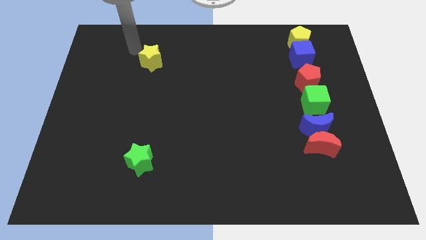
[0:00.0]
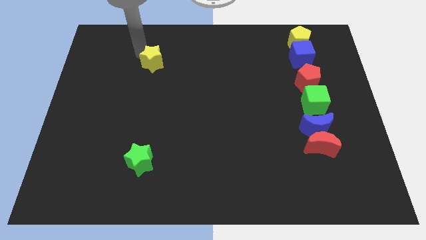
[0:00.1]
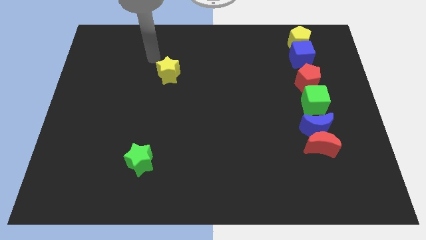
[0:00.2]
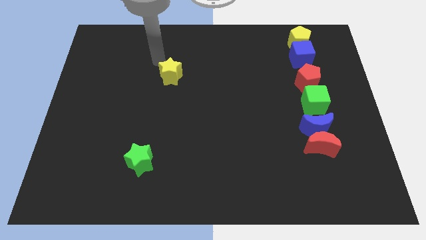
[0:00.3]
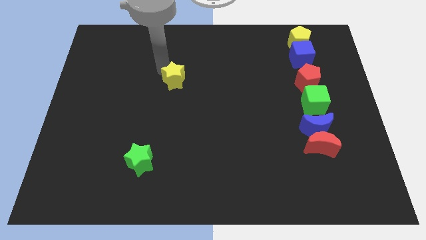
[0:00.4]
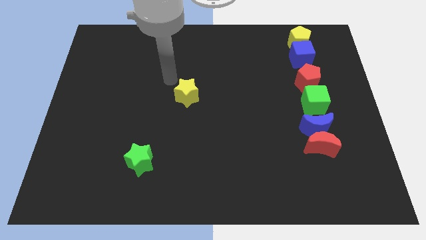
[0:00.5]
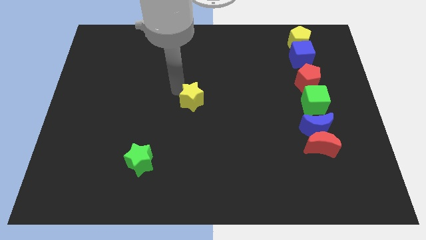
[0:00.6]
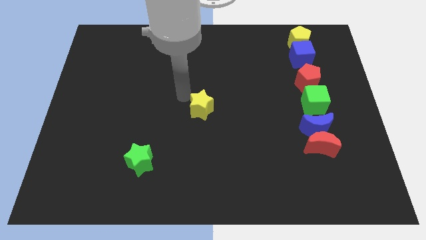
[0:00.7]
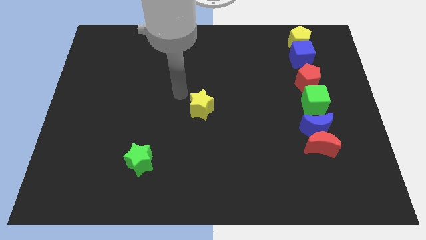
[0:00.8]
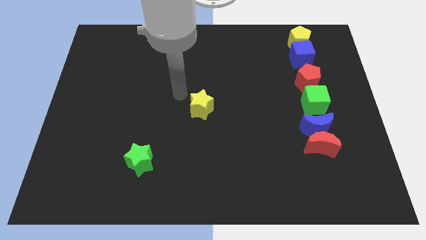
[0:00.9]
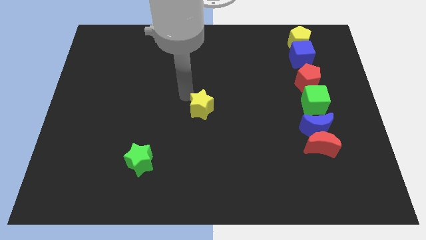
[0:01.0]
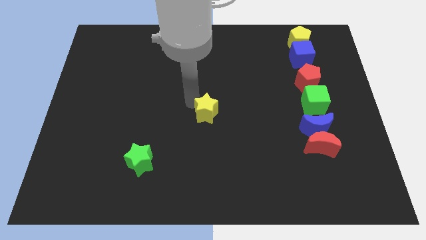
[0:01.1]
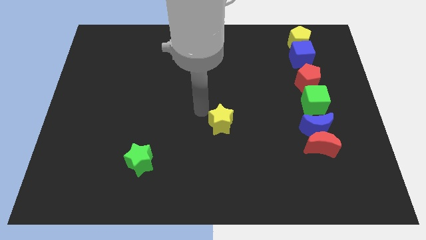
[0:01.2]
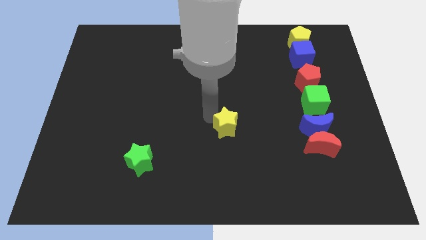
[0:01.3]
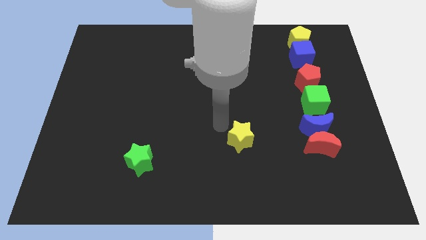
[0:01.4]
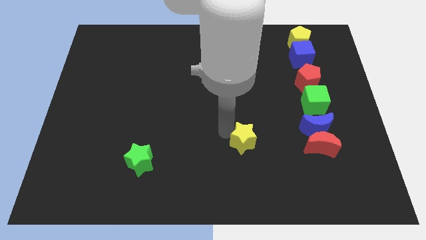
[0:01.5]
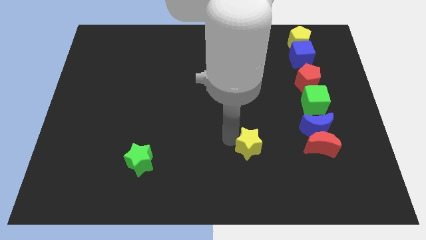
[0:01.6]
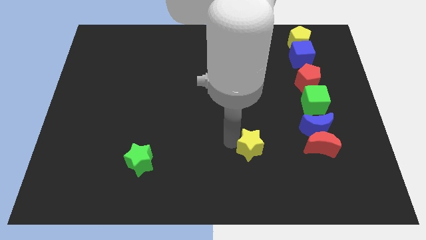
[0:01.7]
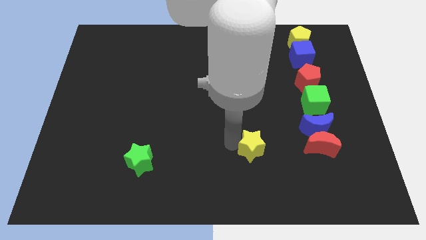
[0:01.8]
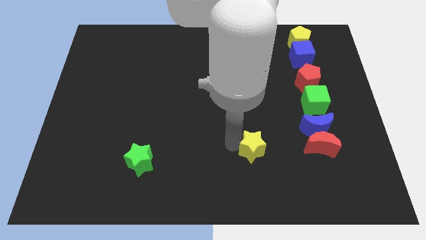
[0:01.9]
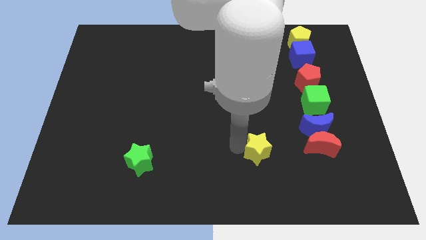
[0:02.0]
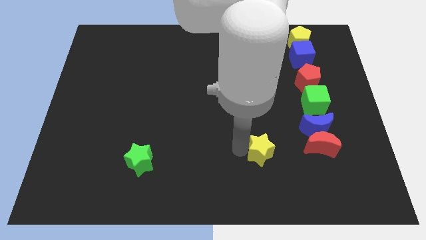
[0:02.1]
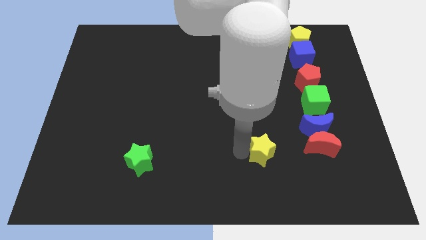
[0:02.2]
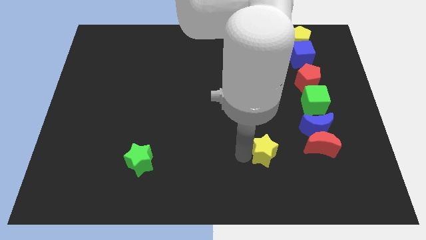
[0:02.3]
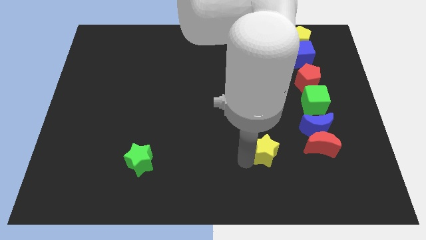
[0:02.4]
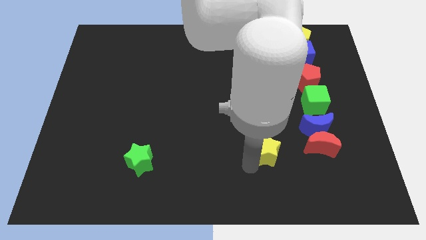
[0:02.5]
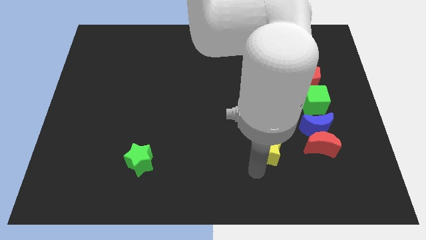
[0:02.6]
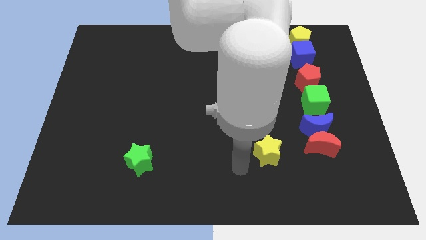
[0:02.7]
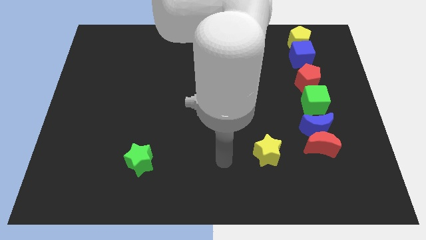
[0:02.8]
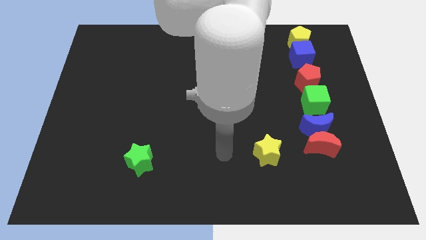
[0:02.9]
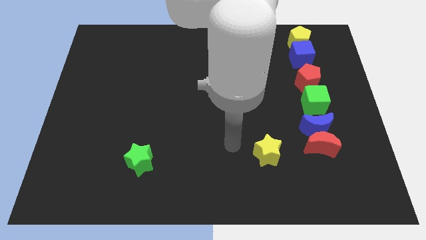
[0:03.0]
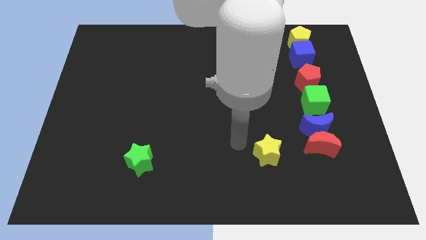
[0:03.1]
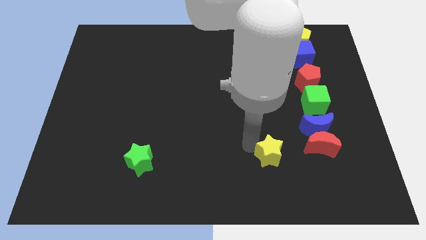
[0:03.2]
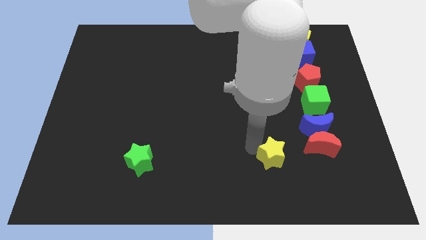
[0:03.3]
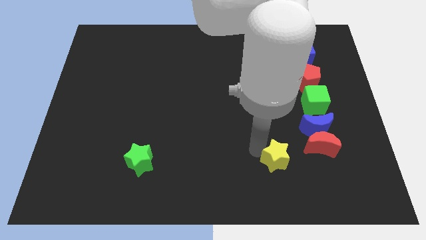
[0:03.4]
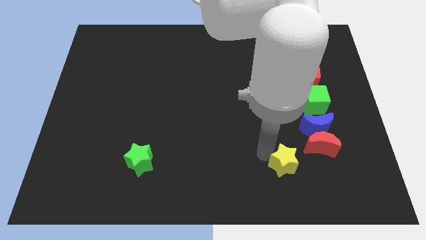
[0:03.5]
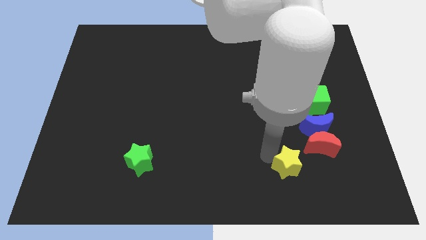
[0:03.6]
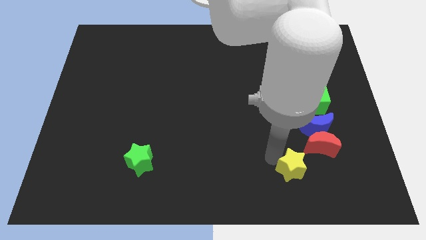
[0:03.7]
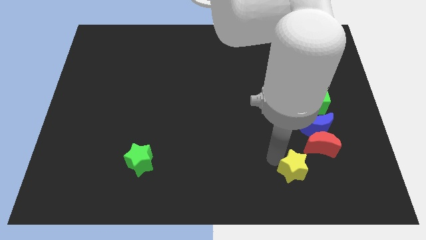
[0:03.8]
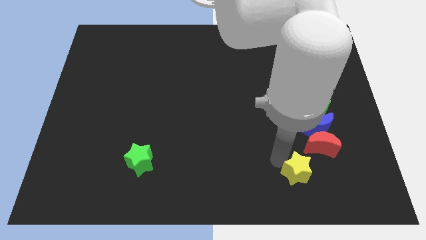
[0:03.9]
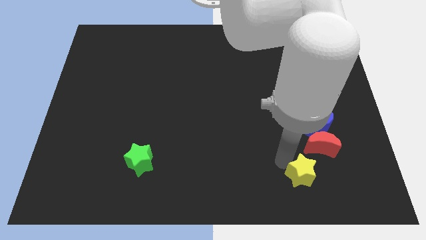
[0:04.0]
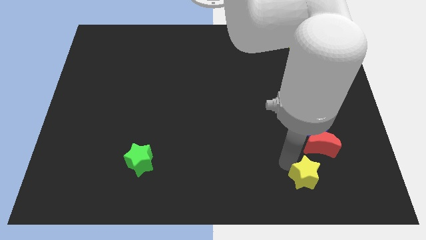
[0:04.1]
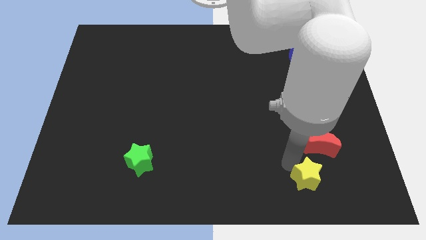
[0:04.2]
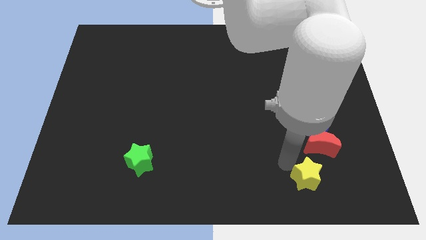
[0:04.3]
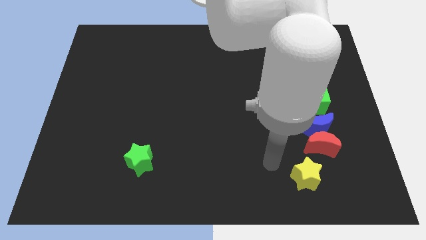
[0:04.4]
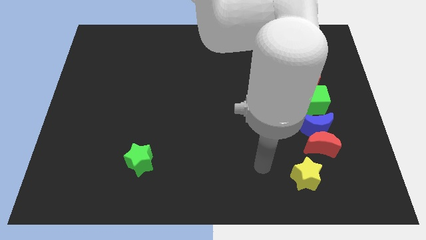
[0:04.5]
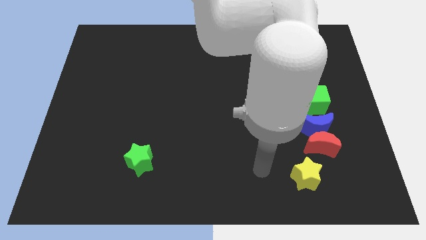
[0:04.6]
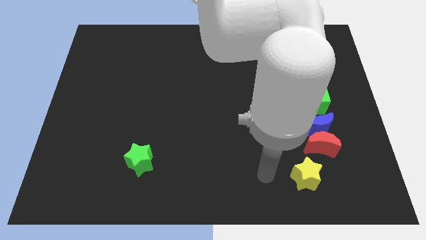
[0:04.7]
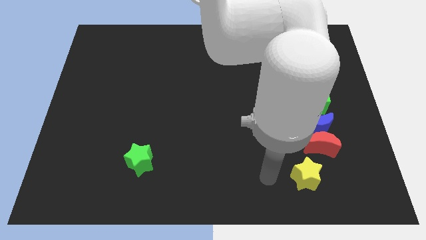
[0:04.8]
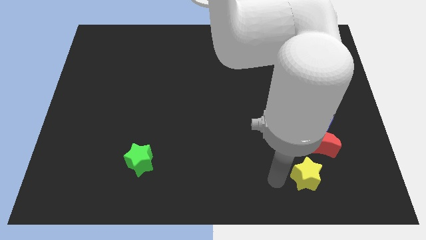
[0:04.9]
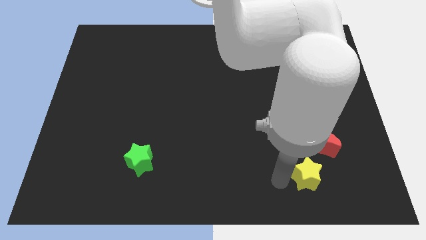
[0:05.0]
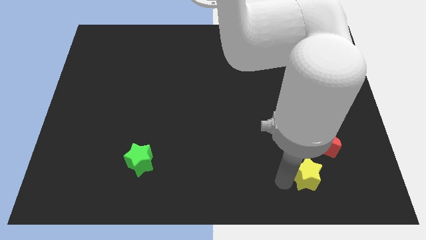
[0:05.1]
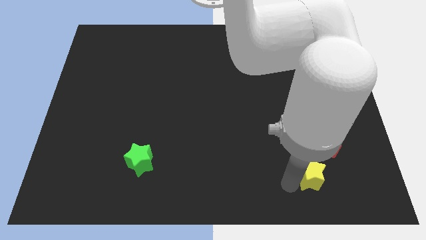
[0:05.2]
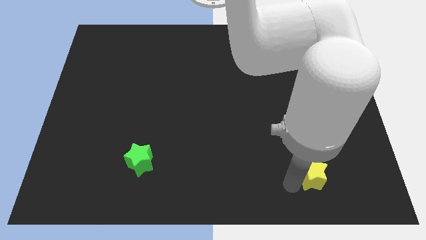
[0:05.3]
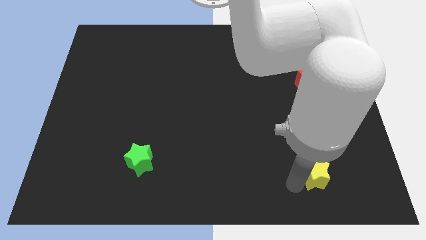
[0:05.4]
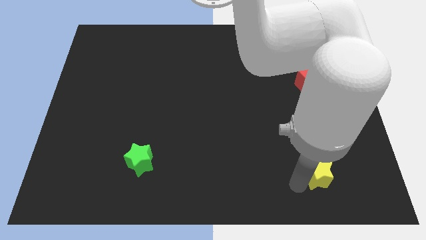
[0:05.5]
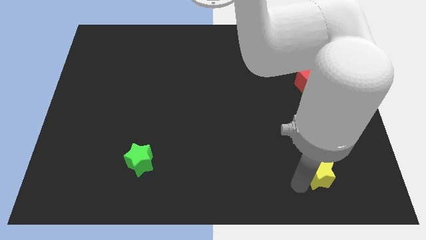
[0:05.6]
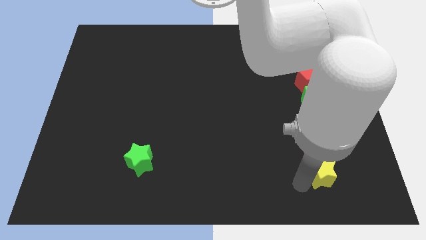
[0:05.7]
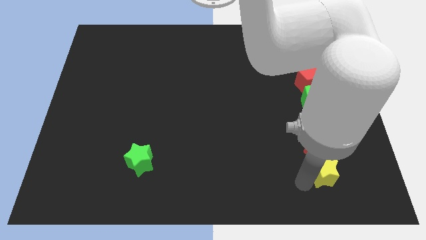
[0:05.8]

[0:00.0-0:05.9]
place yellow star below red moon

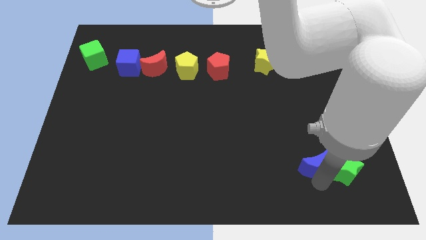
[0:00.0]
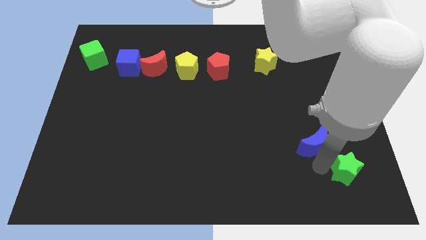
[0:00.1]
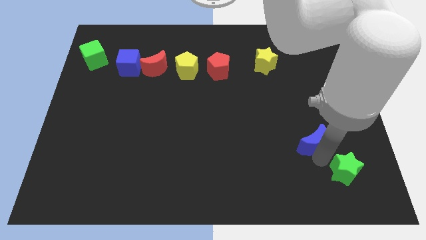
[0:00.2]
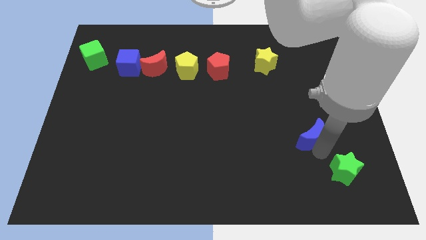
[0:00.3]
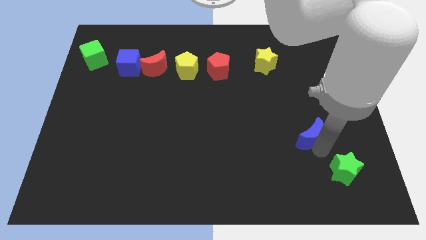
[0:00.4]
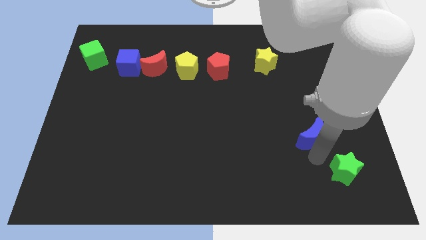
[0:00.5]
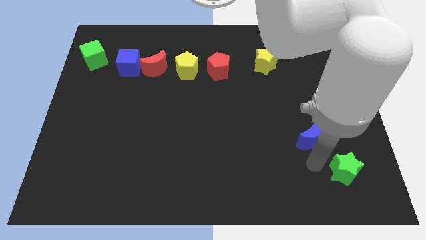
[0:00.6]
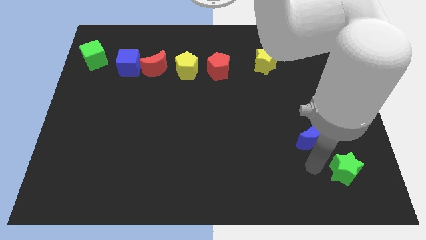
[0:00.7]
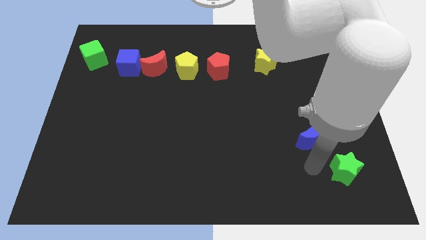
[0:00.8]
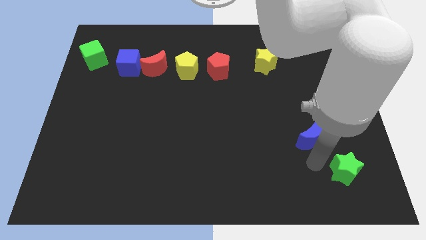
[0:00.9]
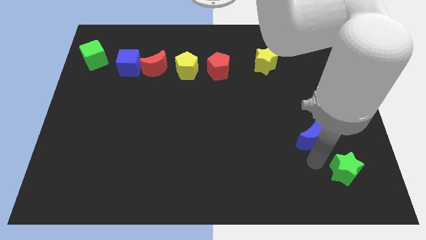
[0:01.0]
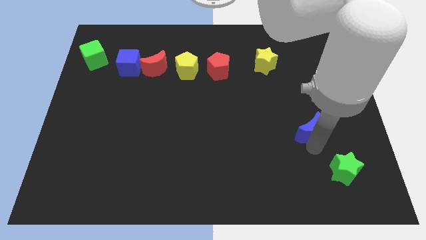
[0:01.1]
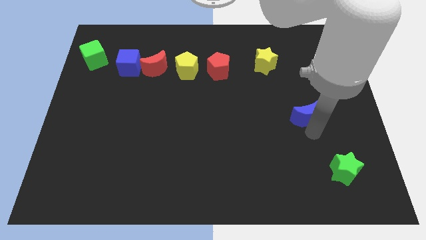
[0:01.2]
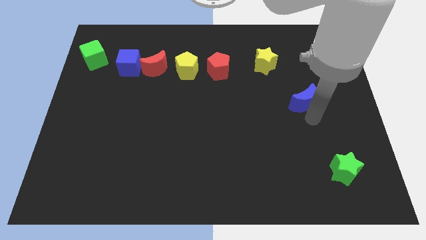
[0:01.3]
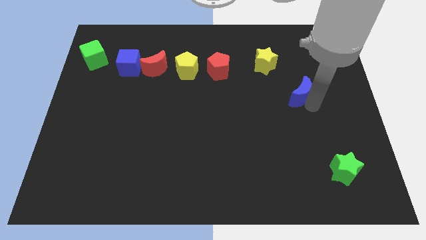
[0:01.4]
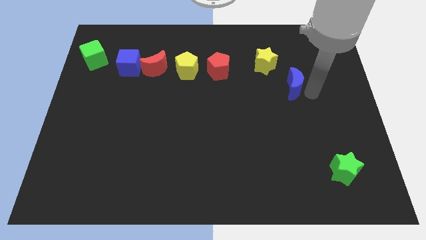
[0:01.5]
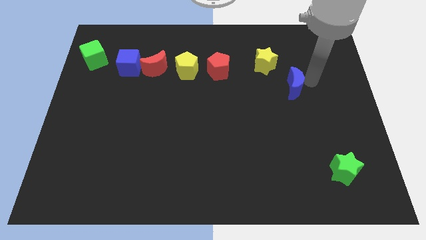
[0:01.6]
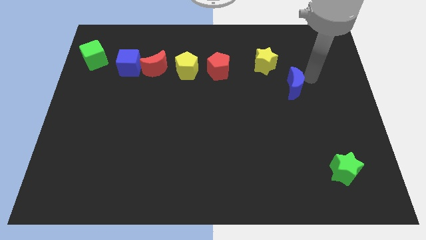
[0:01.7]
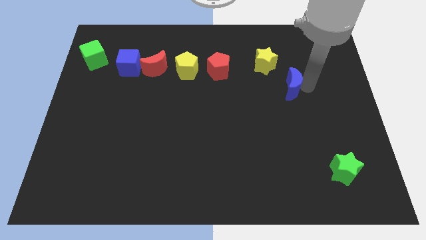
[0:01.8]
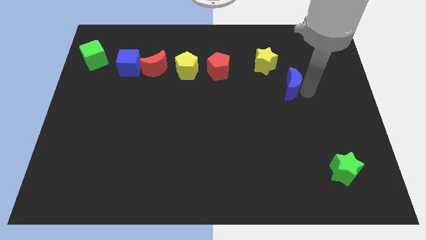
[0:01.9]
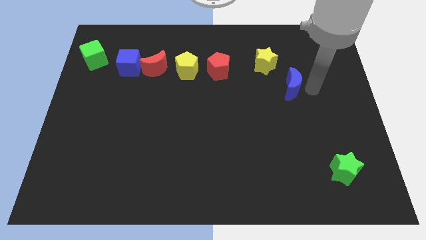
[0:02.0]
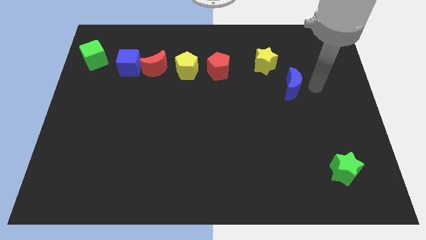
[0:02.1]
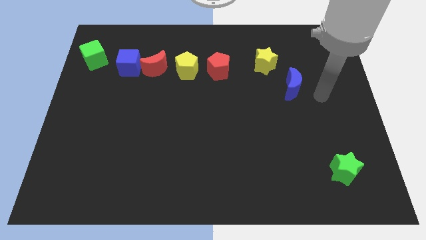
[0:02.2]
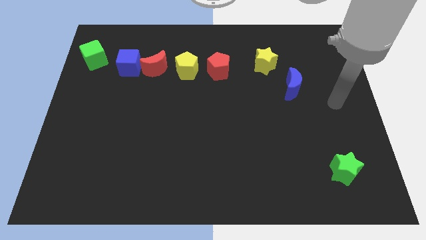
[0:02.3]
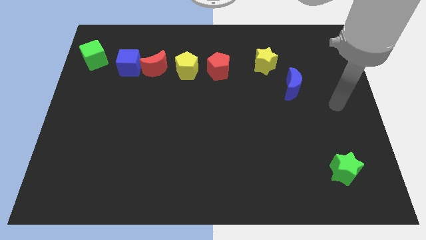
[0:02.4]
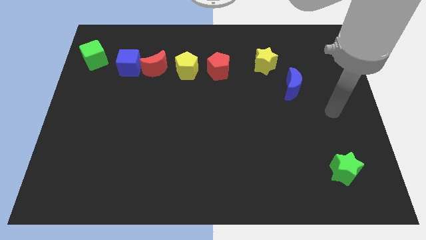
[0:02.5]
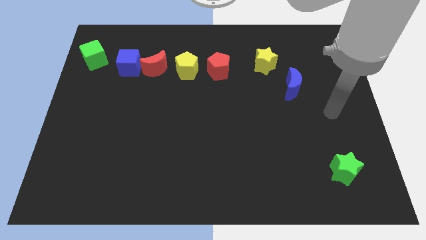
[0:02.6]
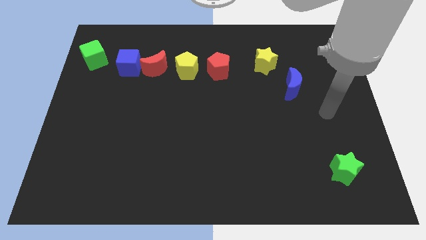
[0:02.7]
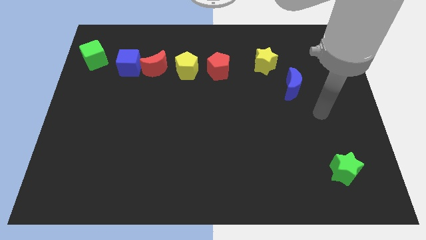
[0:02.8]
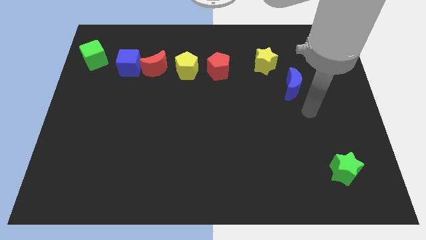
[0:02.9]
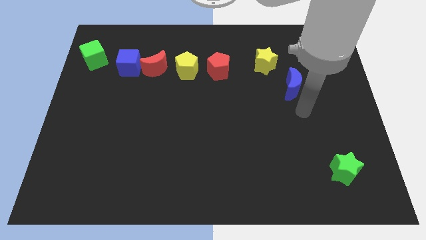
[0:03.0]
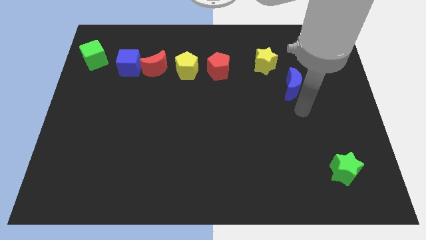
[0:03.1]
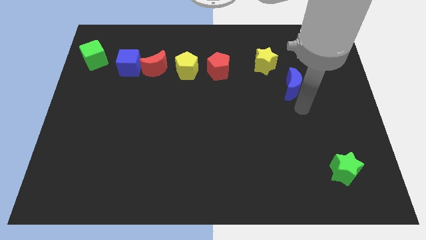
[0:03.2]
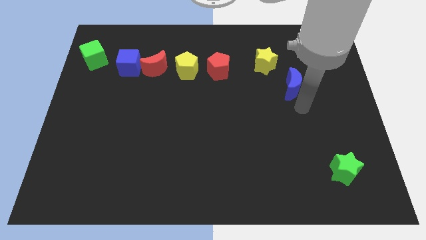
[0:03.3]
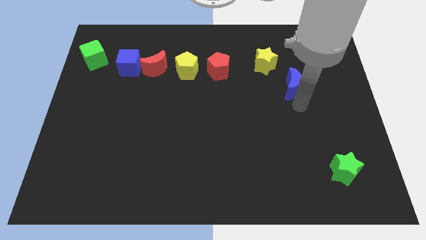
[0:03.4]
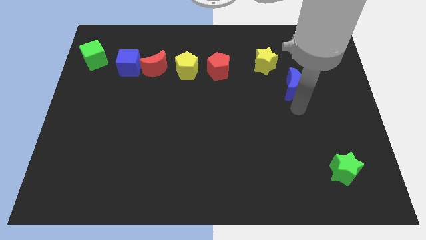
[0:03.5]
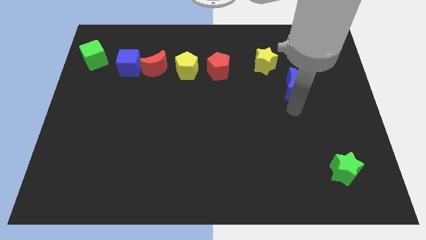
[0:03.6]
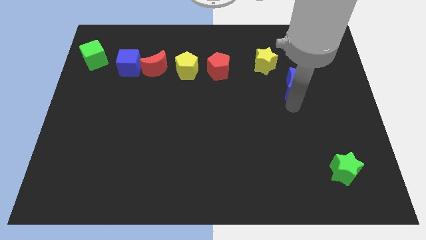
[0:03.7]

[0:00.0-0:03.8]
place blue moon to the bottom right of yellow star
